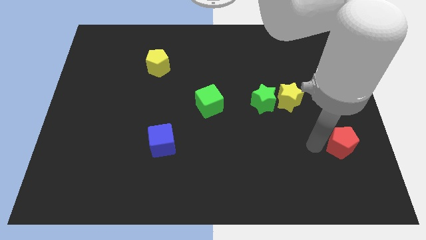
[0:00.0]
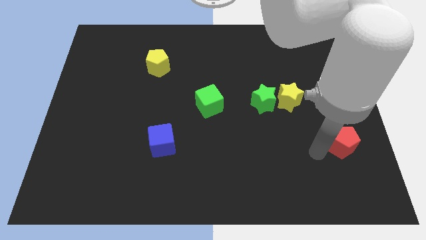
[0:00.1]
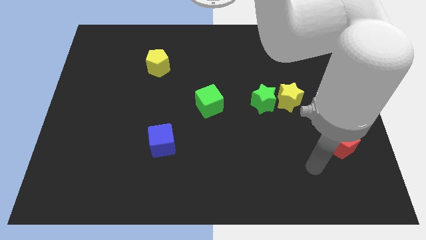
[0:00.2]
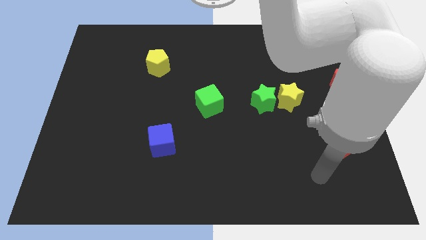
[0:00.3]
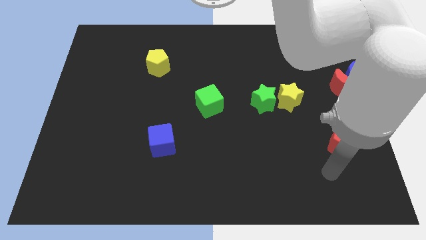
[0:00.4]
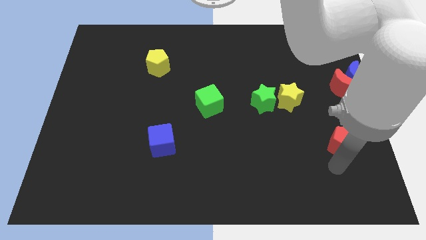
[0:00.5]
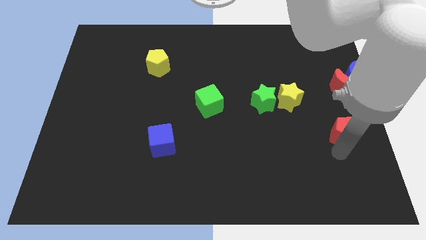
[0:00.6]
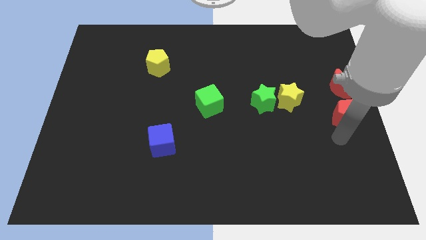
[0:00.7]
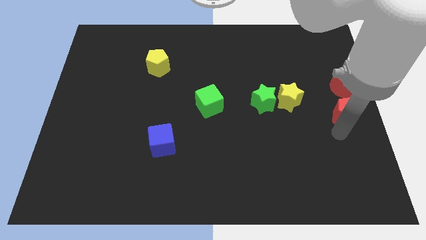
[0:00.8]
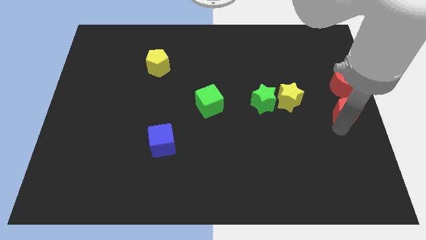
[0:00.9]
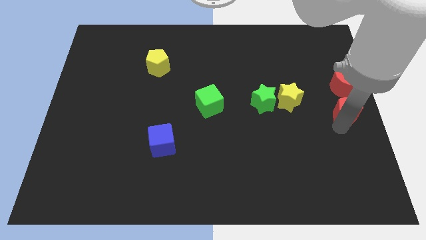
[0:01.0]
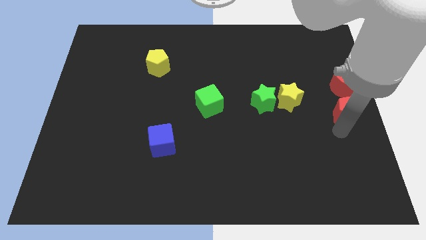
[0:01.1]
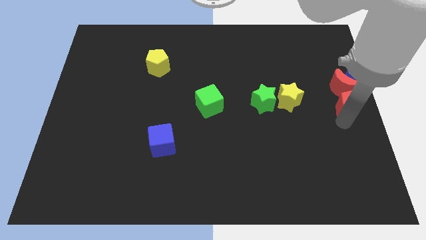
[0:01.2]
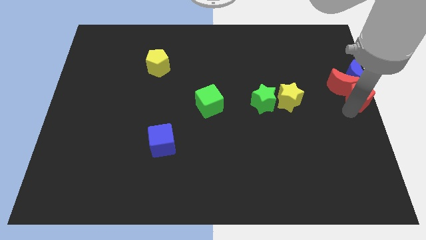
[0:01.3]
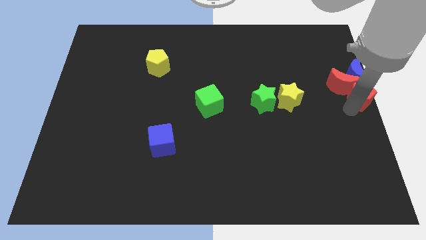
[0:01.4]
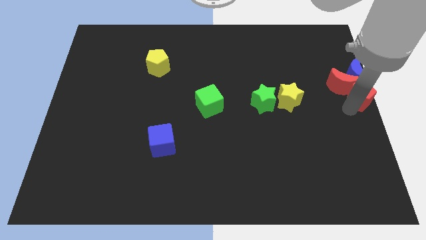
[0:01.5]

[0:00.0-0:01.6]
push the red pentagon to the bottom of the bue crescent

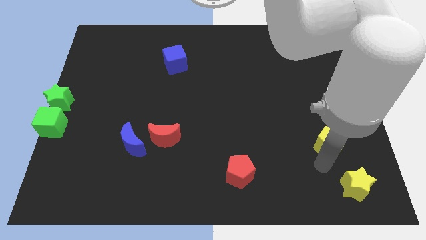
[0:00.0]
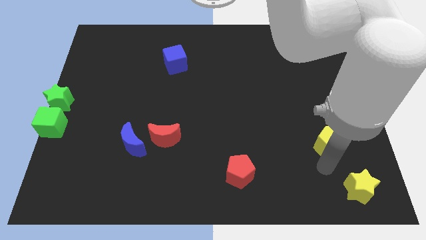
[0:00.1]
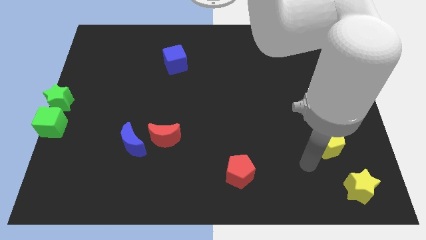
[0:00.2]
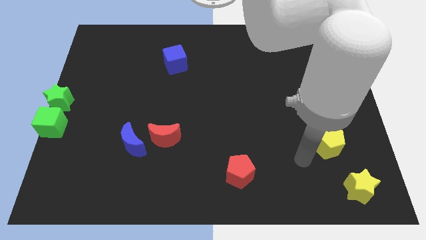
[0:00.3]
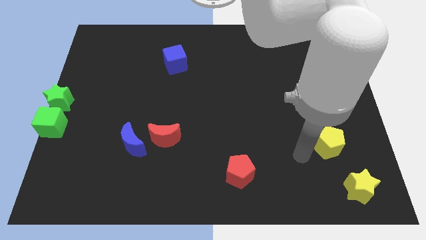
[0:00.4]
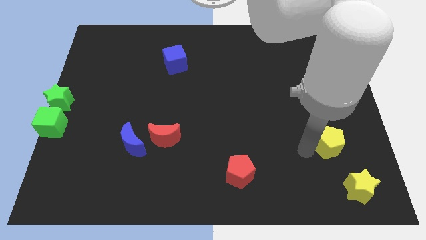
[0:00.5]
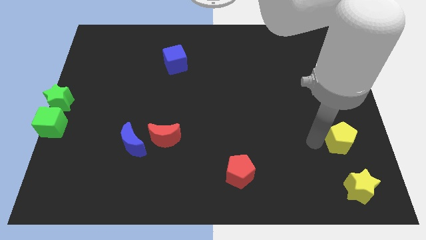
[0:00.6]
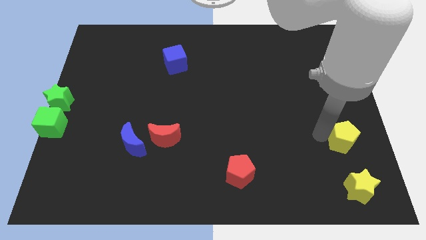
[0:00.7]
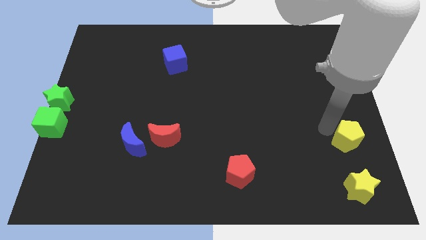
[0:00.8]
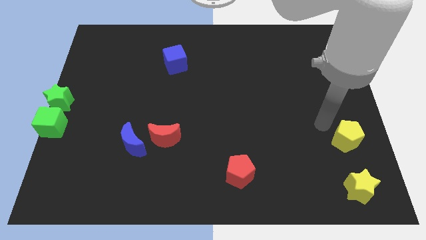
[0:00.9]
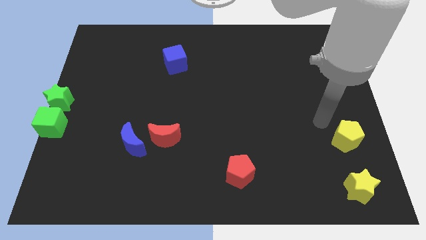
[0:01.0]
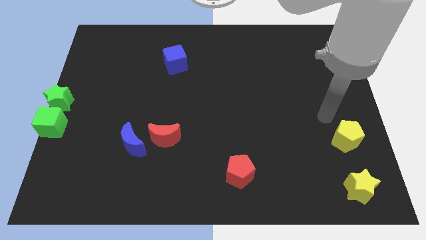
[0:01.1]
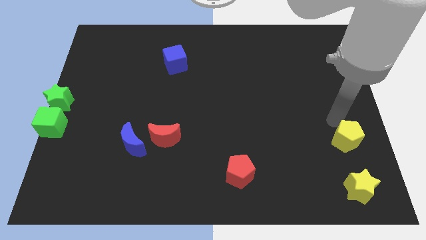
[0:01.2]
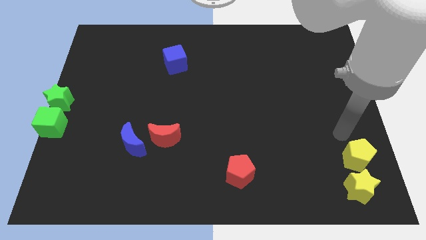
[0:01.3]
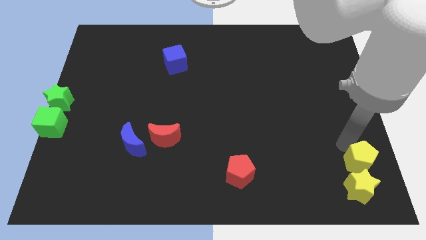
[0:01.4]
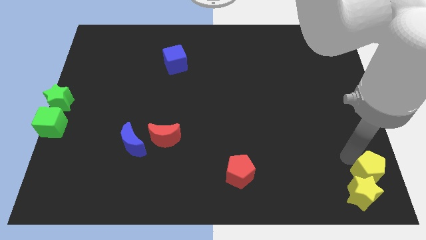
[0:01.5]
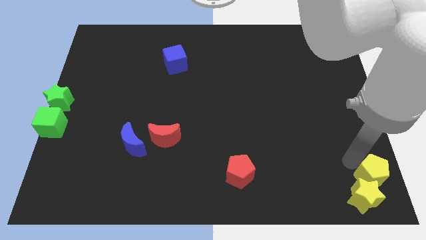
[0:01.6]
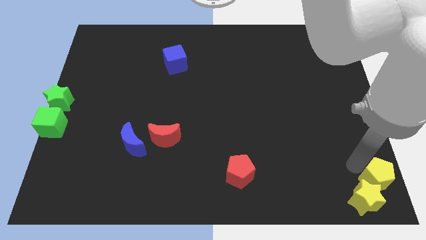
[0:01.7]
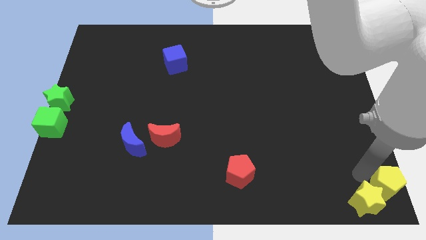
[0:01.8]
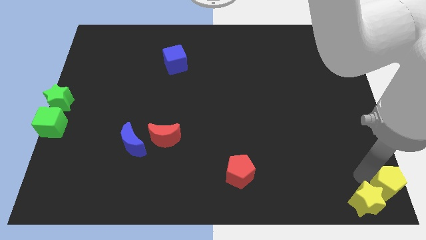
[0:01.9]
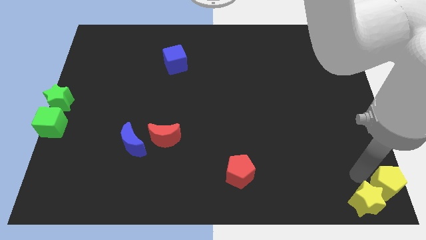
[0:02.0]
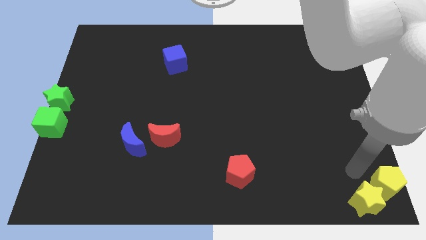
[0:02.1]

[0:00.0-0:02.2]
place the yellow pentagon at the bottom right corner

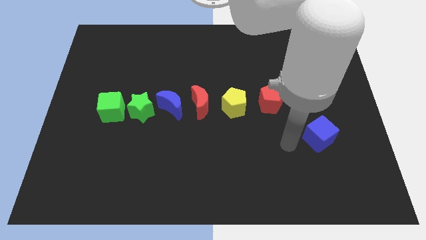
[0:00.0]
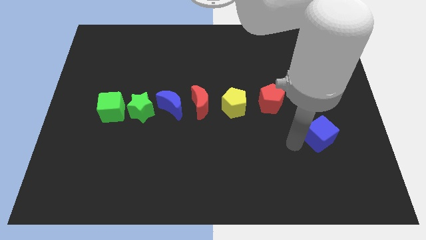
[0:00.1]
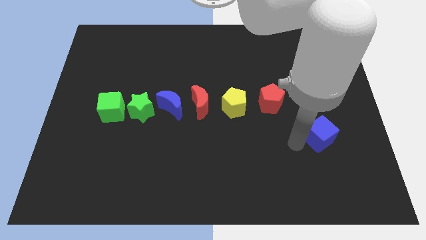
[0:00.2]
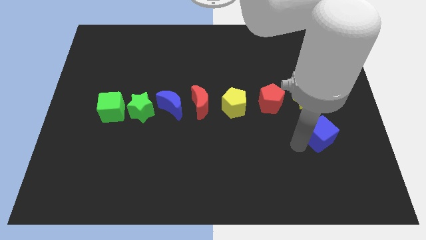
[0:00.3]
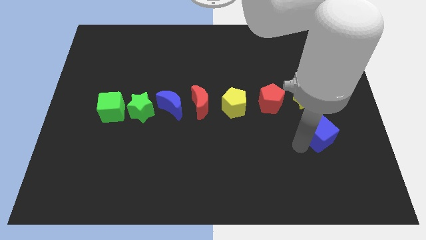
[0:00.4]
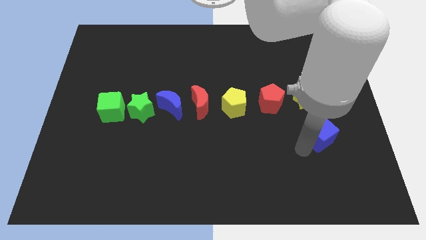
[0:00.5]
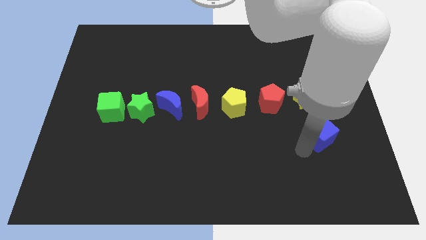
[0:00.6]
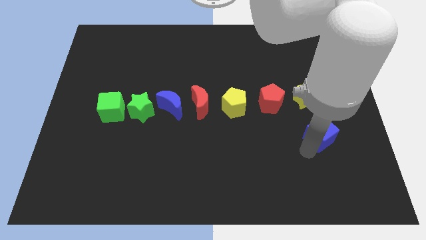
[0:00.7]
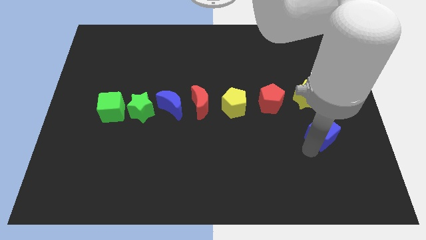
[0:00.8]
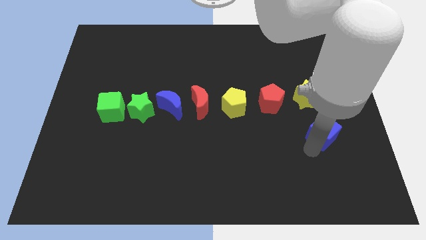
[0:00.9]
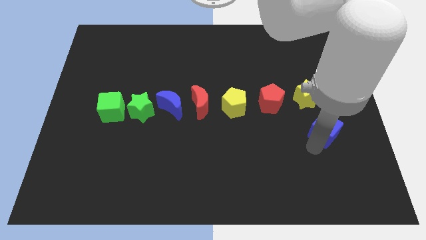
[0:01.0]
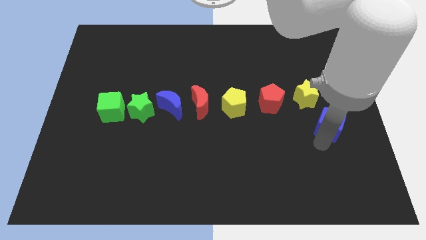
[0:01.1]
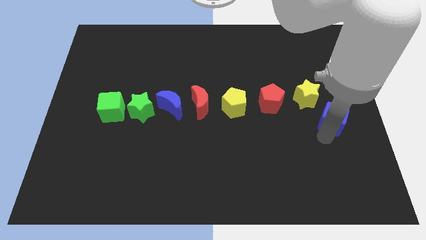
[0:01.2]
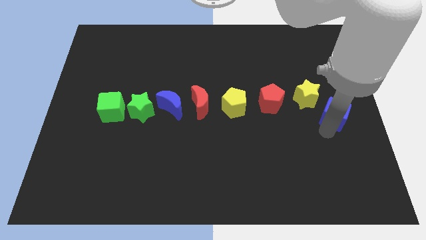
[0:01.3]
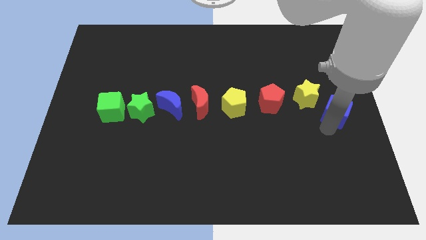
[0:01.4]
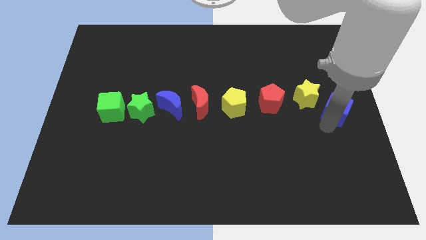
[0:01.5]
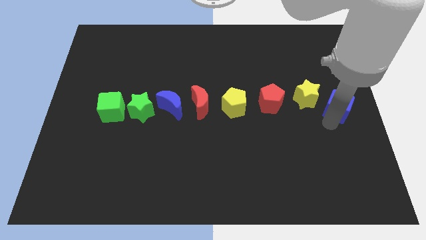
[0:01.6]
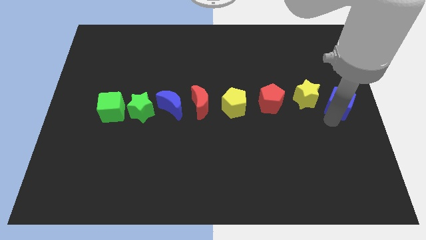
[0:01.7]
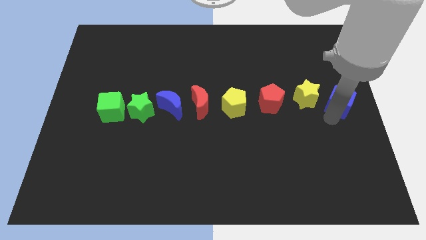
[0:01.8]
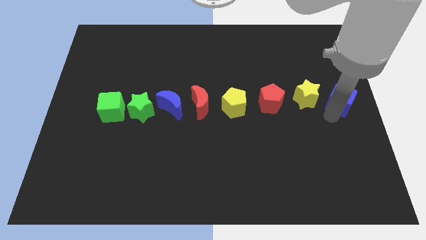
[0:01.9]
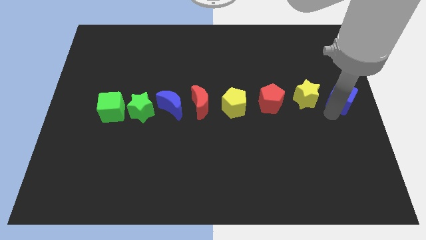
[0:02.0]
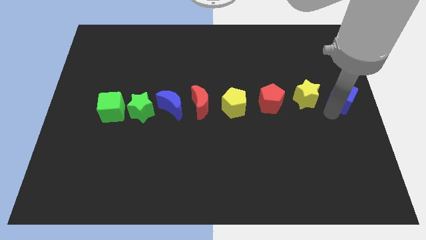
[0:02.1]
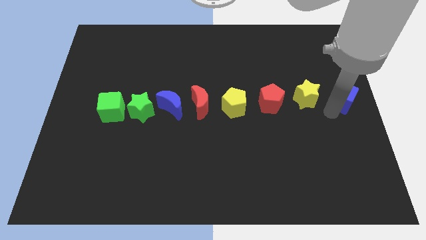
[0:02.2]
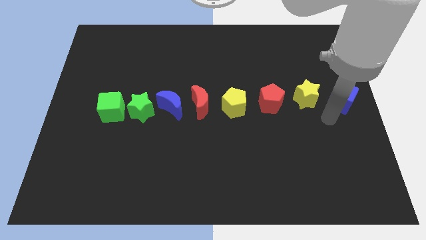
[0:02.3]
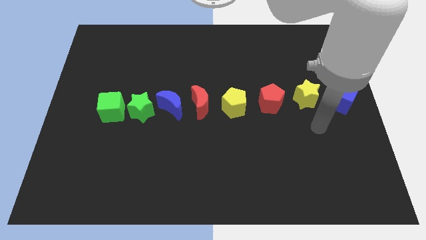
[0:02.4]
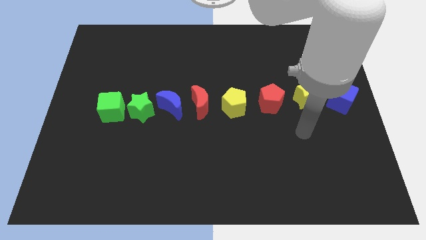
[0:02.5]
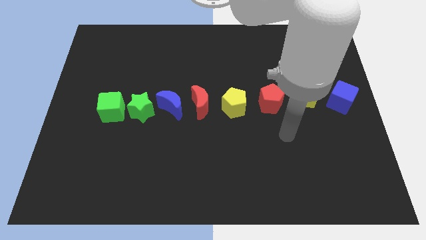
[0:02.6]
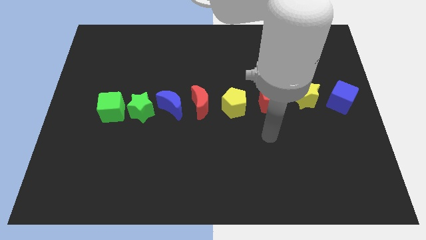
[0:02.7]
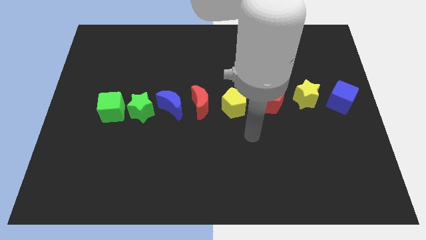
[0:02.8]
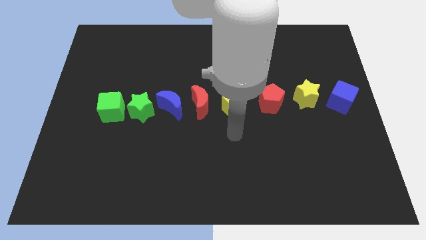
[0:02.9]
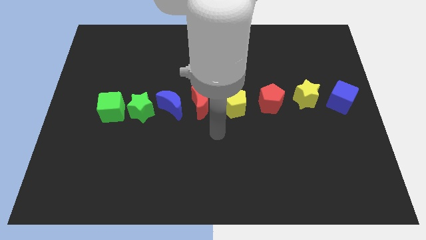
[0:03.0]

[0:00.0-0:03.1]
place the blue cube to the right of the yellow star

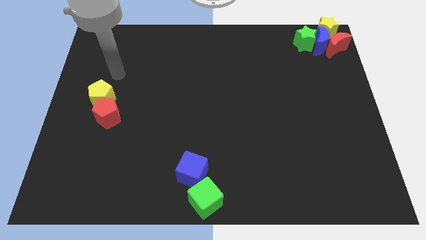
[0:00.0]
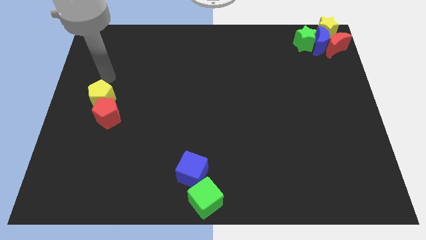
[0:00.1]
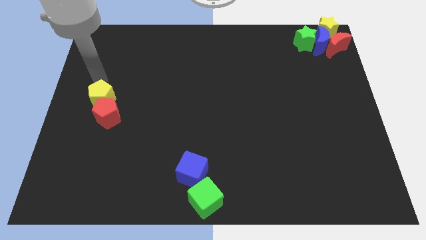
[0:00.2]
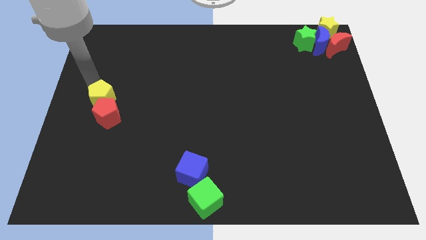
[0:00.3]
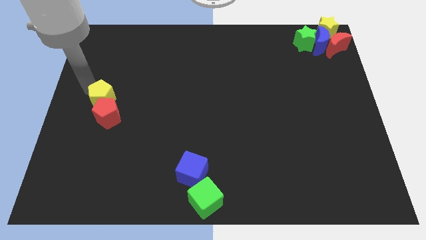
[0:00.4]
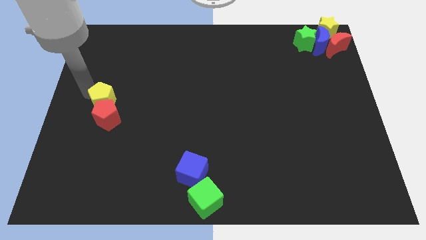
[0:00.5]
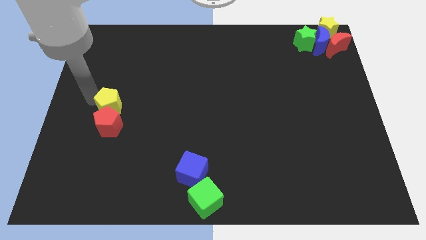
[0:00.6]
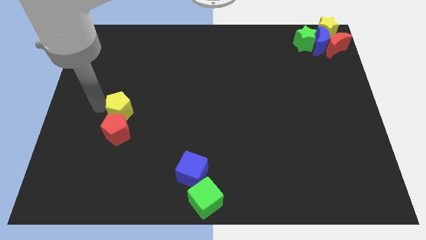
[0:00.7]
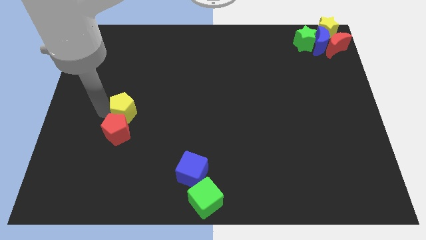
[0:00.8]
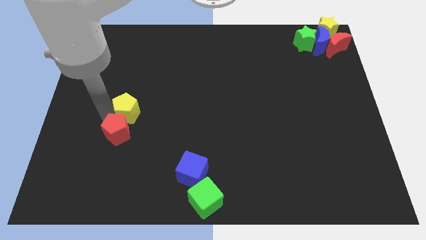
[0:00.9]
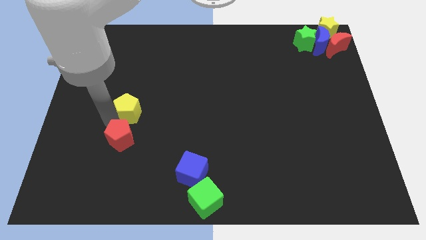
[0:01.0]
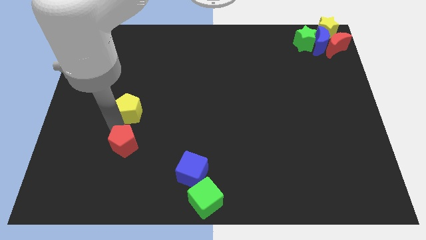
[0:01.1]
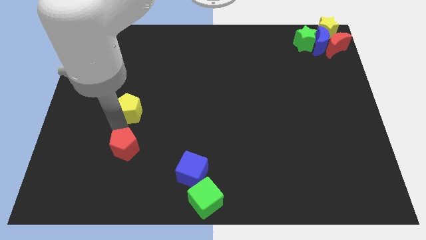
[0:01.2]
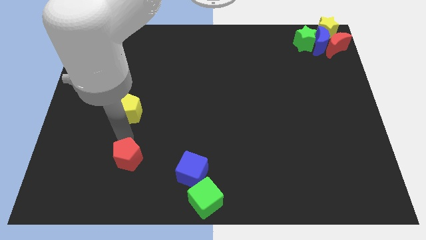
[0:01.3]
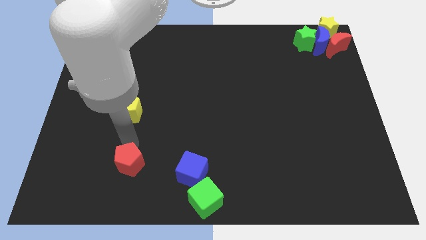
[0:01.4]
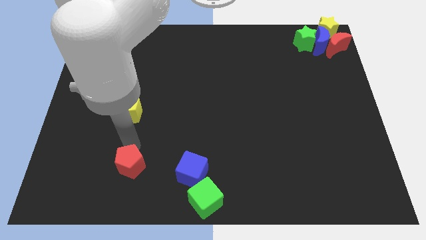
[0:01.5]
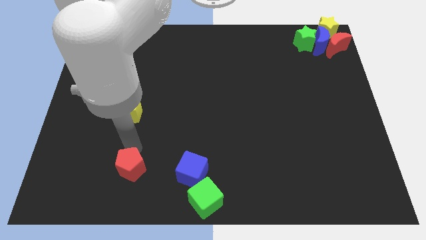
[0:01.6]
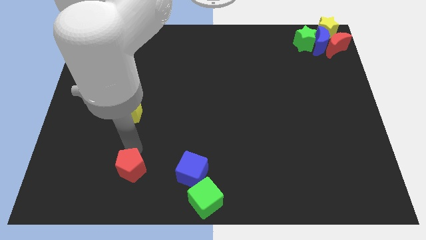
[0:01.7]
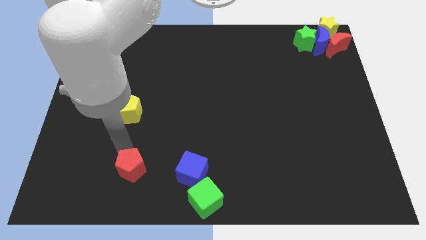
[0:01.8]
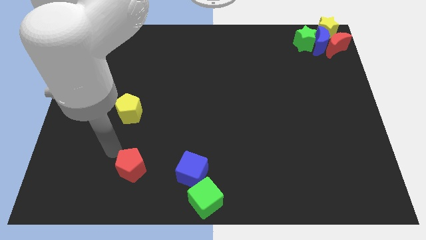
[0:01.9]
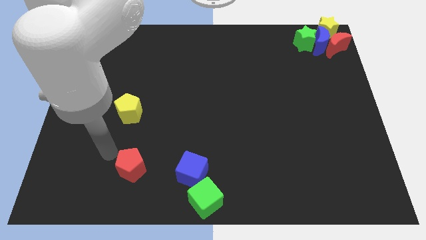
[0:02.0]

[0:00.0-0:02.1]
separate the red pentagon from yellow pentagon

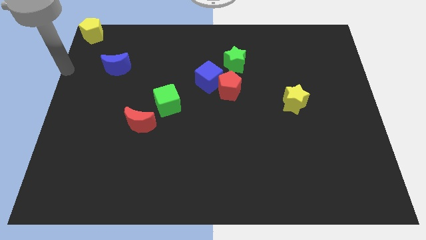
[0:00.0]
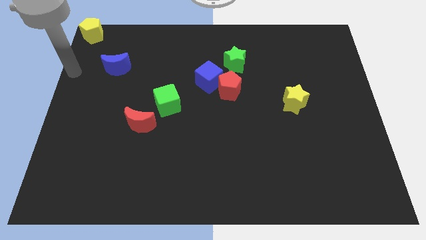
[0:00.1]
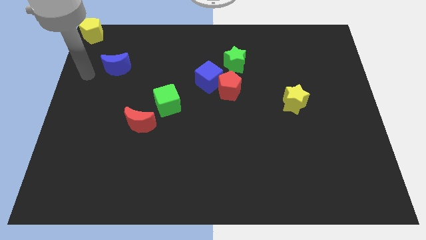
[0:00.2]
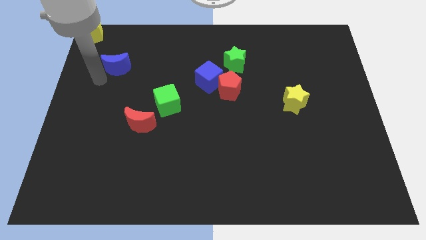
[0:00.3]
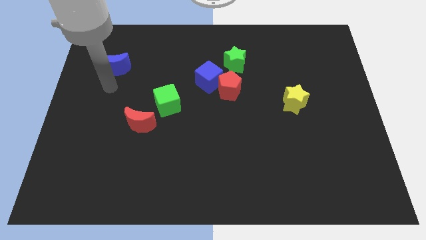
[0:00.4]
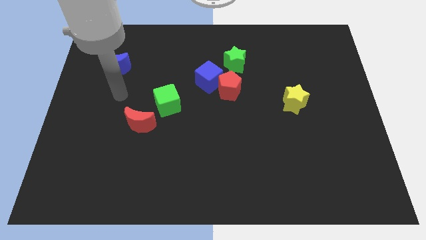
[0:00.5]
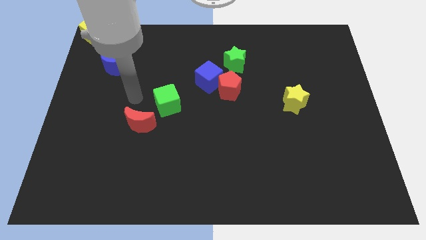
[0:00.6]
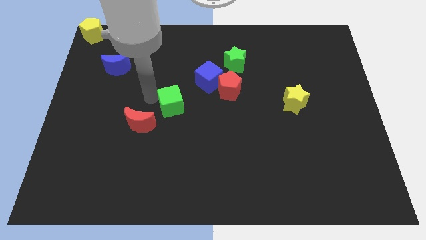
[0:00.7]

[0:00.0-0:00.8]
tap green cube on its left
